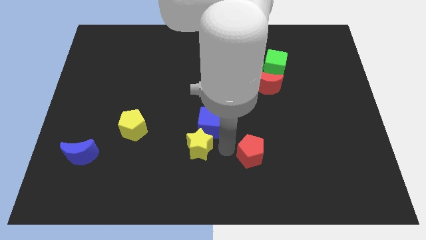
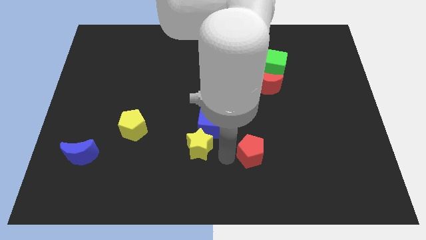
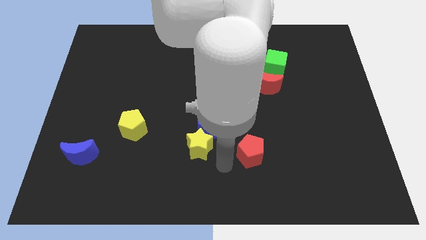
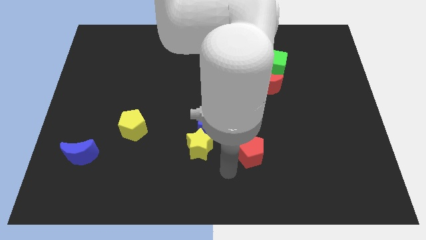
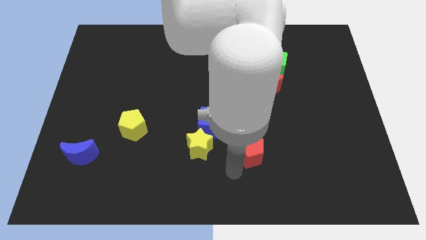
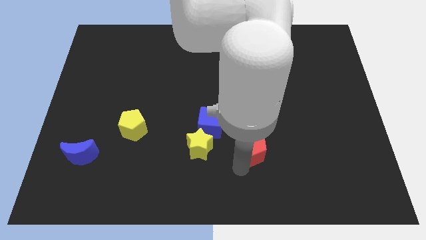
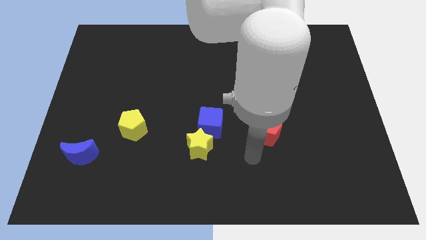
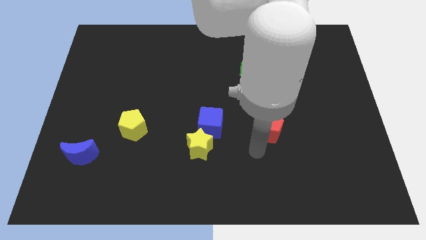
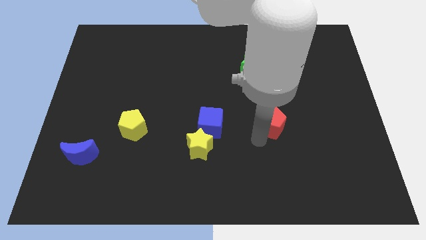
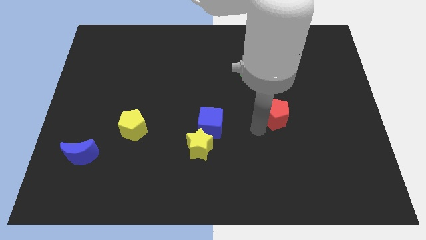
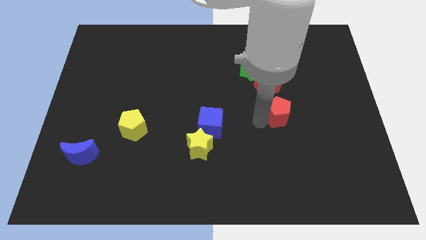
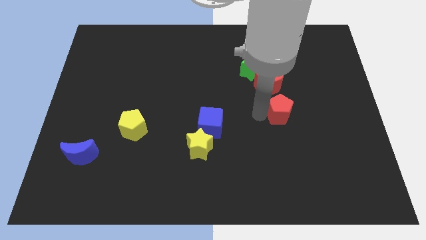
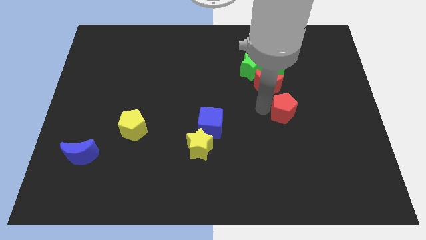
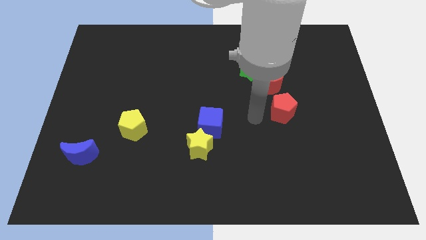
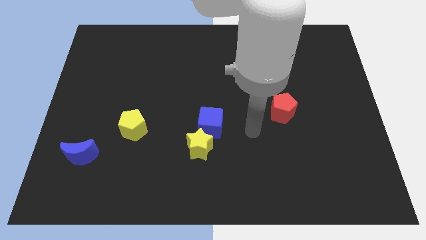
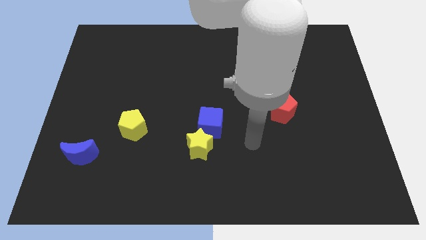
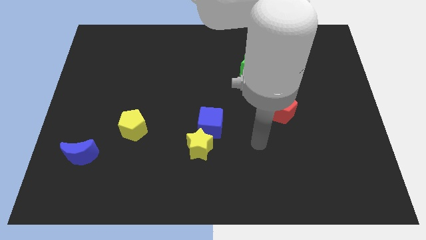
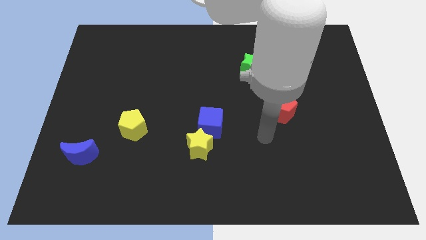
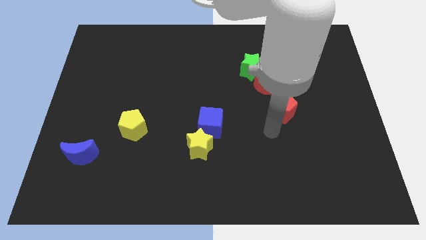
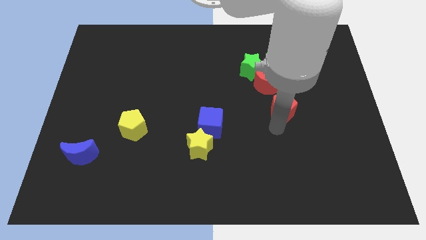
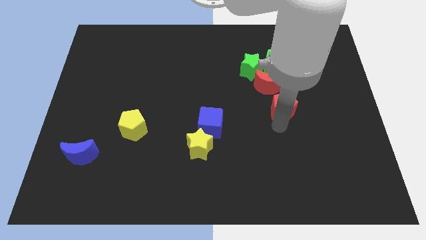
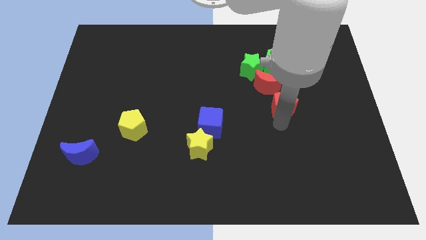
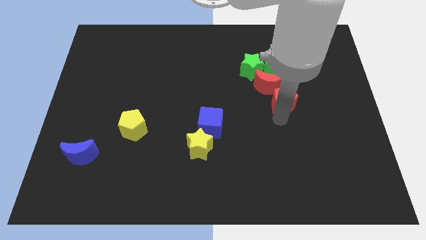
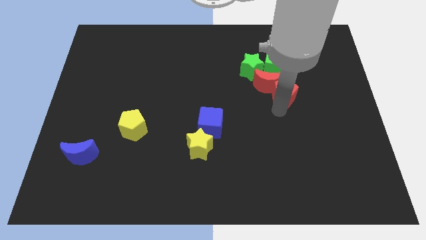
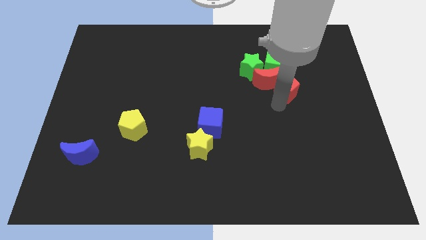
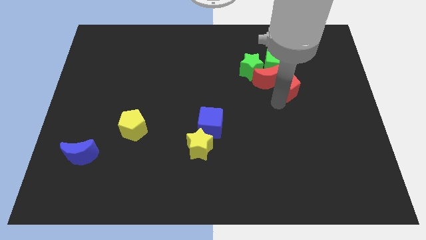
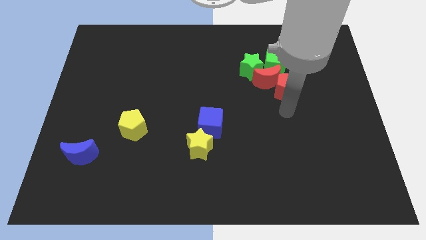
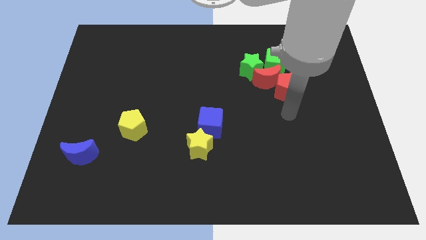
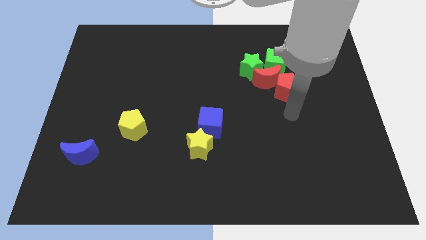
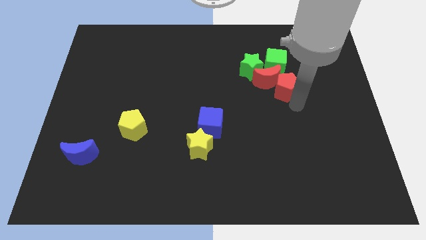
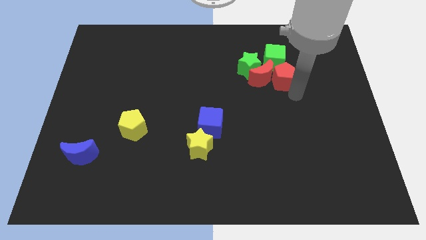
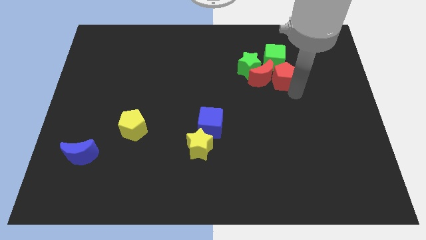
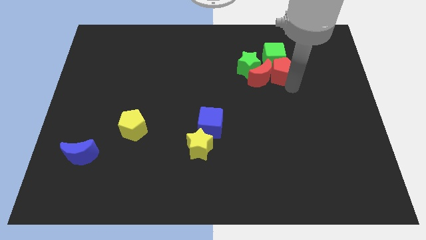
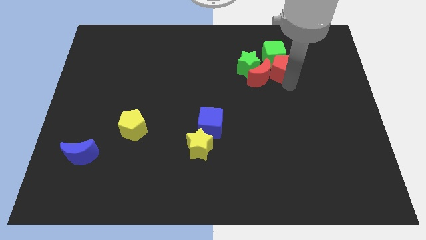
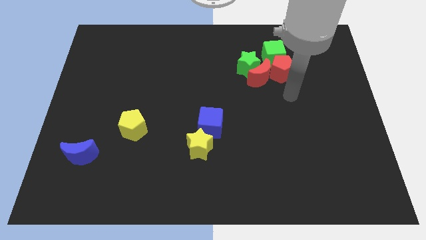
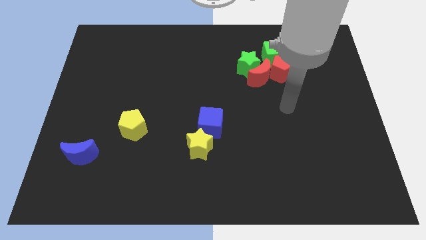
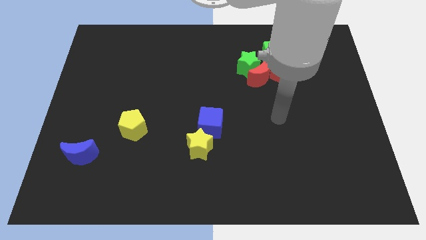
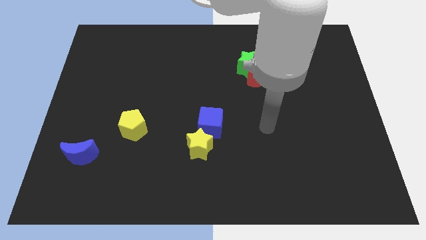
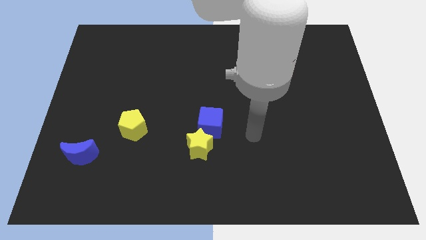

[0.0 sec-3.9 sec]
move the red pentagon into the green cube

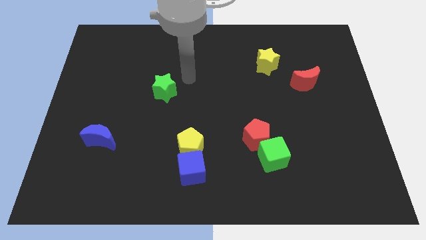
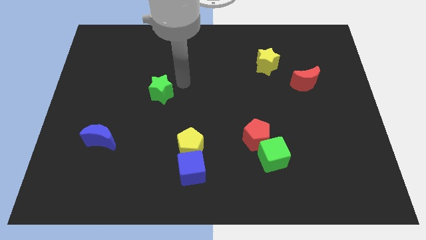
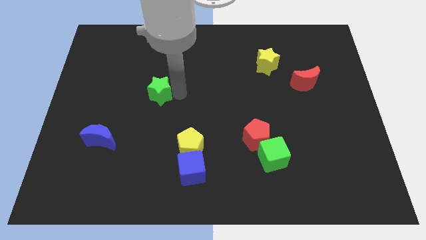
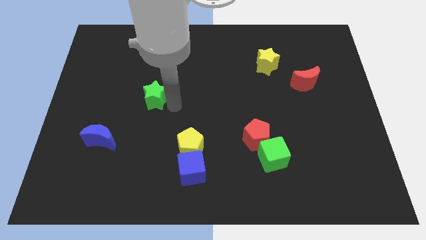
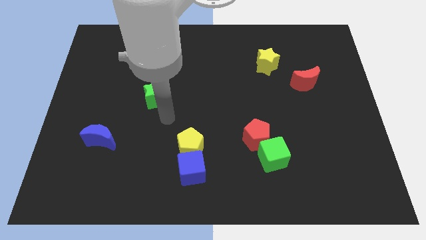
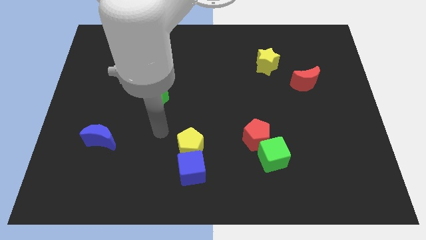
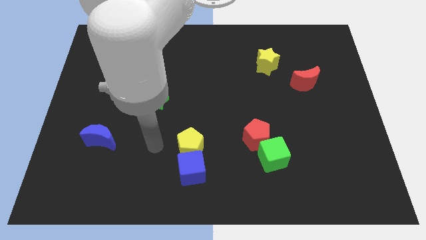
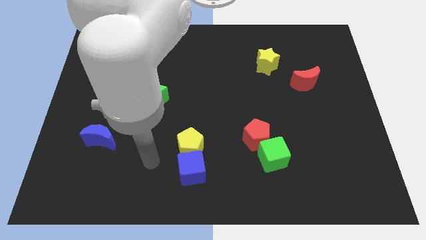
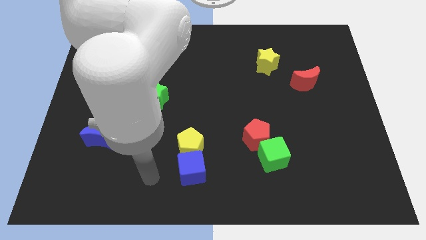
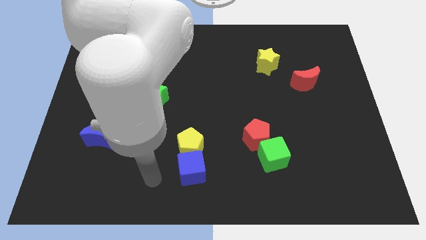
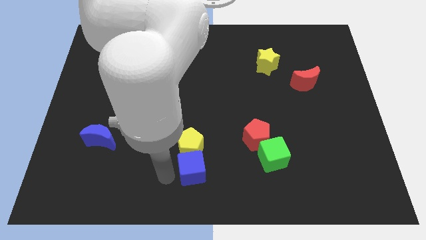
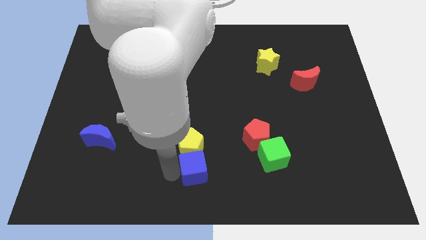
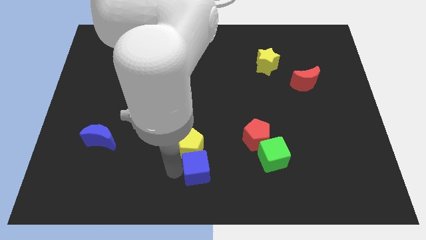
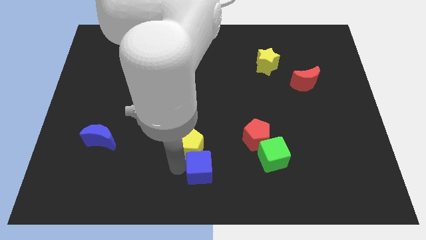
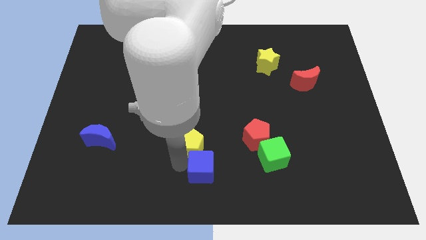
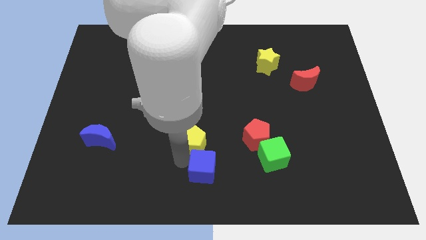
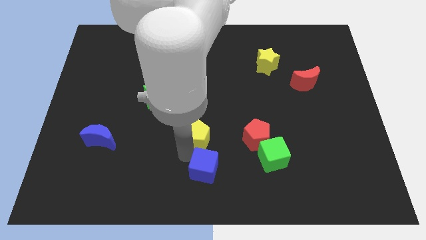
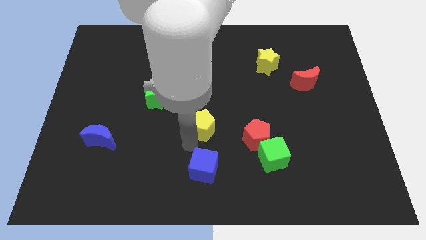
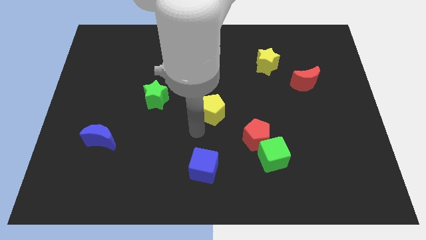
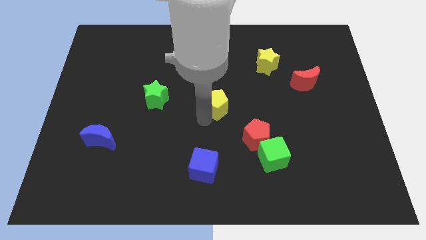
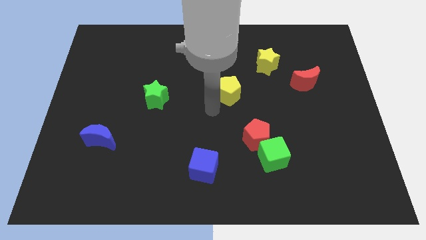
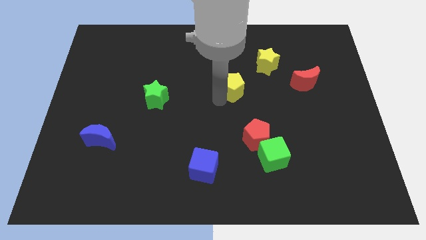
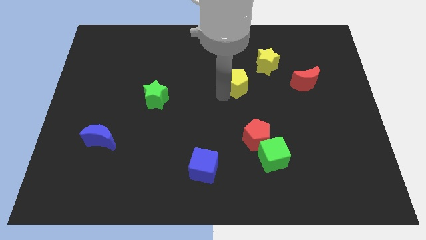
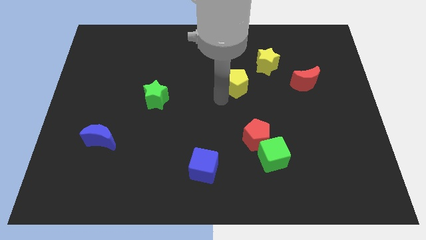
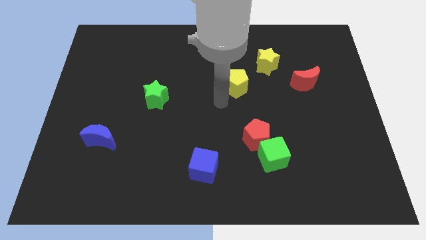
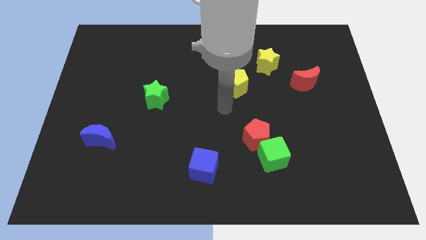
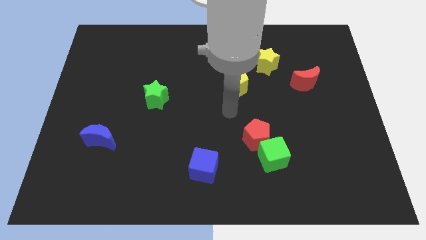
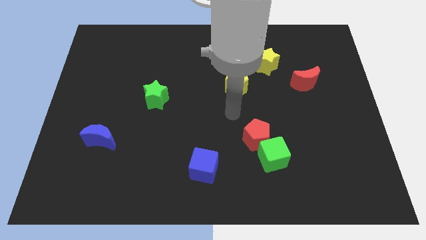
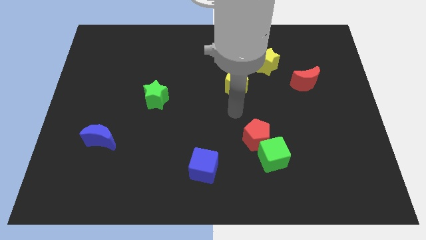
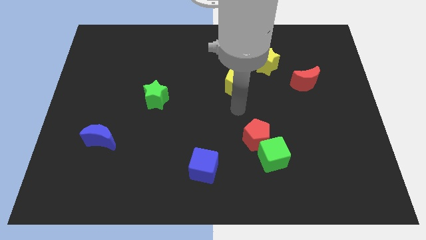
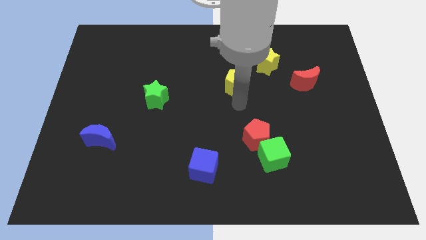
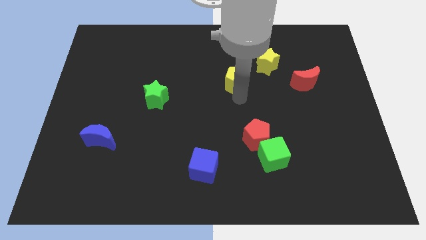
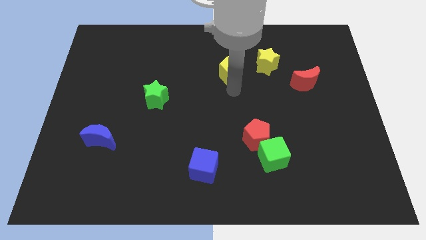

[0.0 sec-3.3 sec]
move the yellow pentagon towards the yellow star

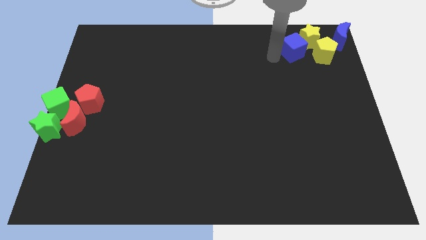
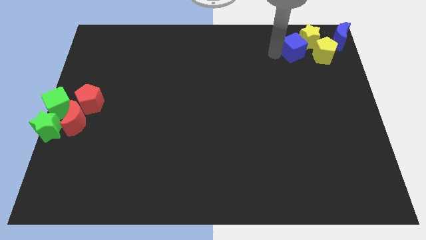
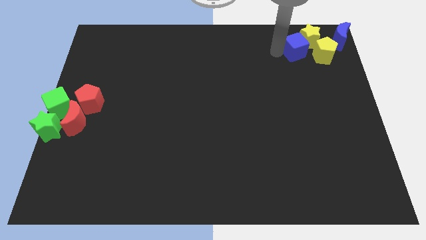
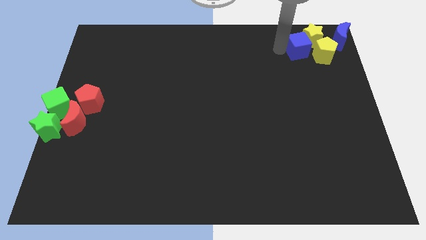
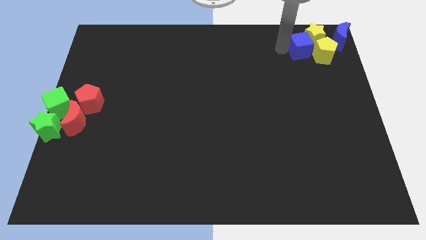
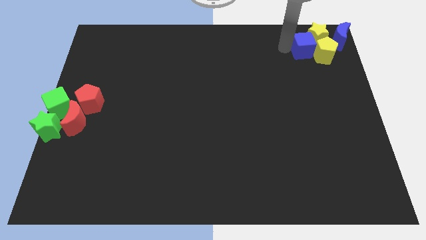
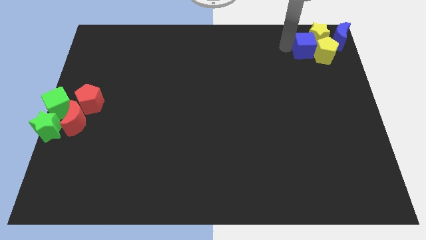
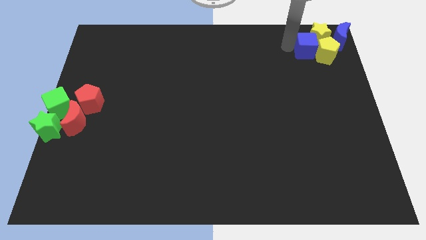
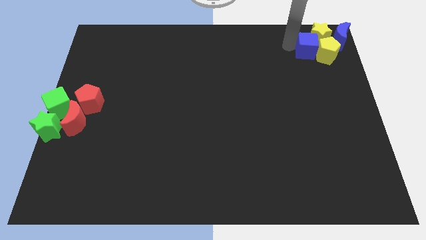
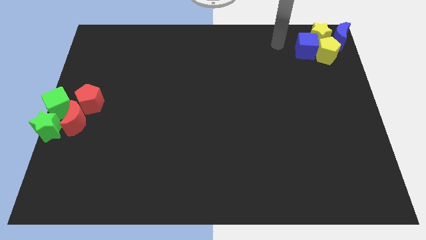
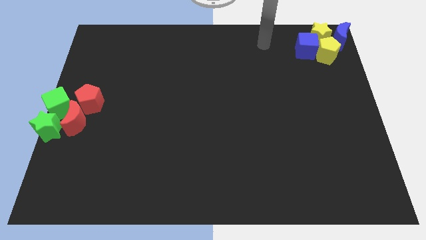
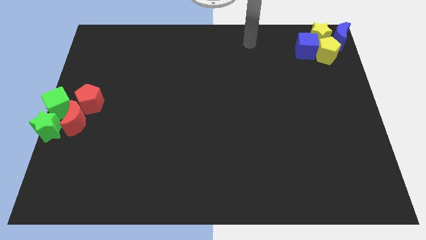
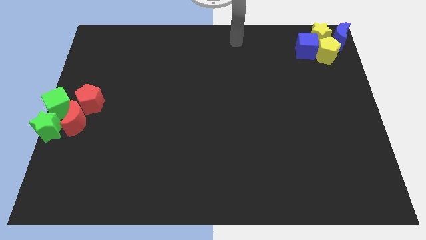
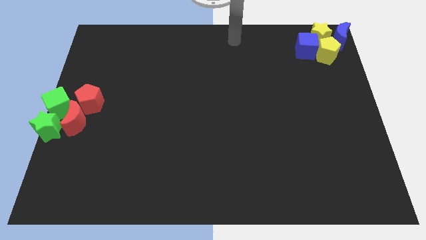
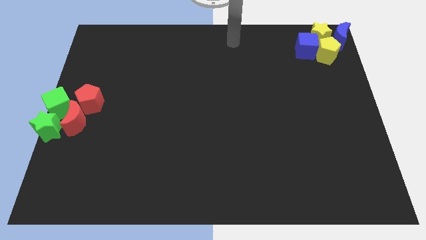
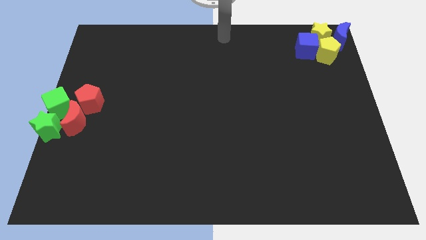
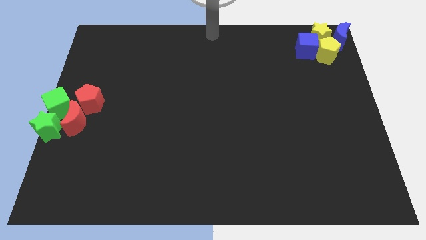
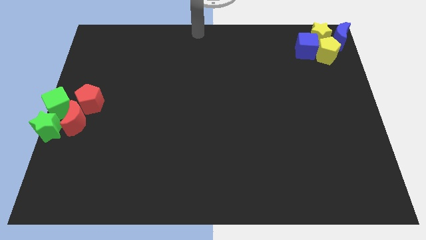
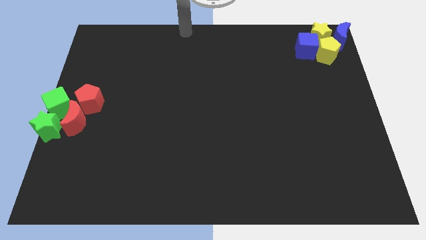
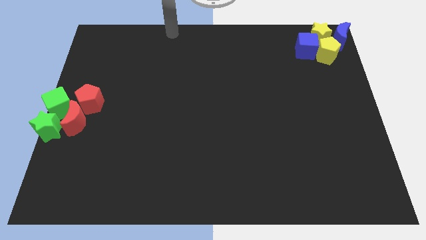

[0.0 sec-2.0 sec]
push the blue cube into the yellow star and pentagon
